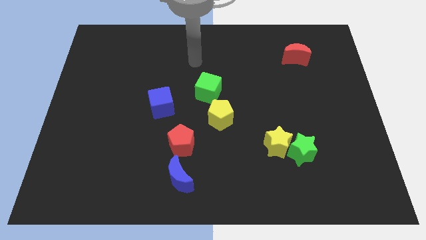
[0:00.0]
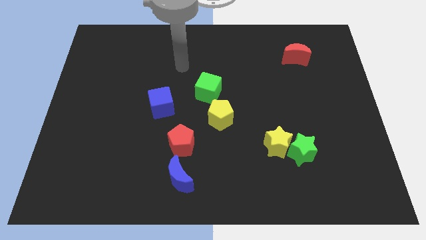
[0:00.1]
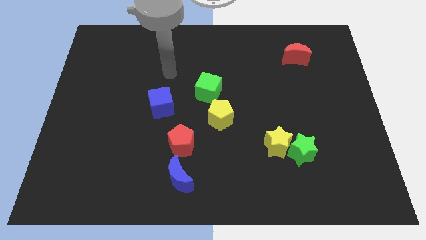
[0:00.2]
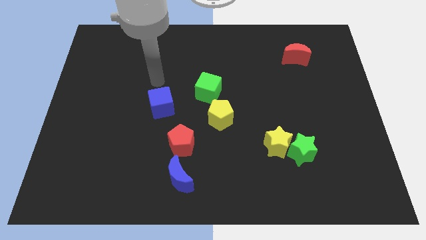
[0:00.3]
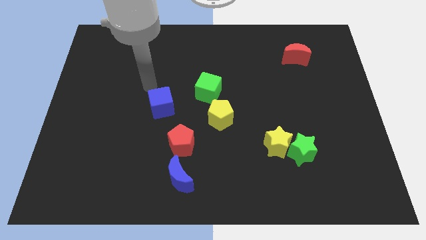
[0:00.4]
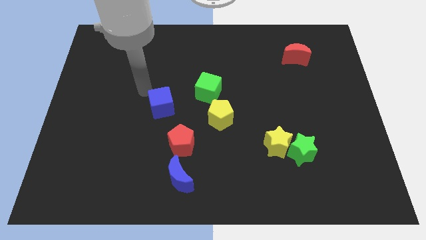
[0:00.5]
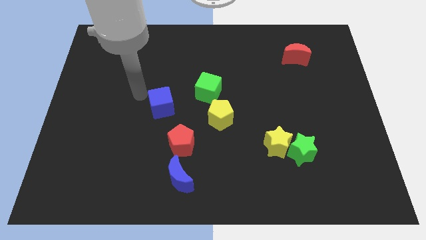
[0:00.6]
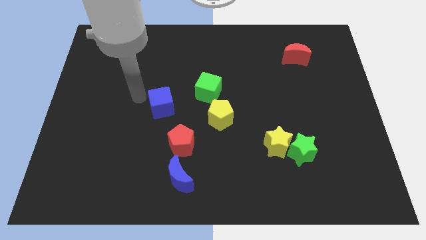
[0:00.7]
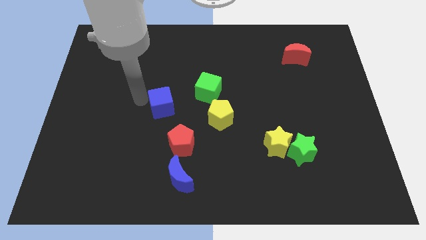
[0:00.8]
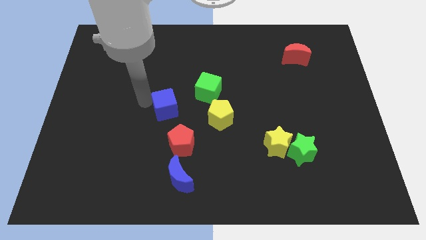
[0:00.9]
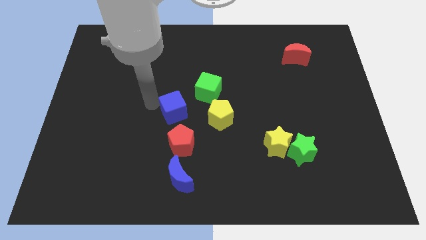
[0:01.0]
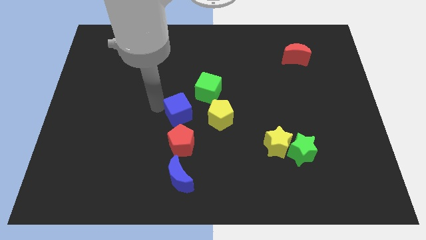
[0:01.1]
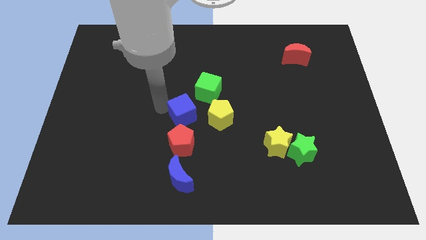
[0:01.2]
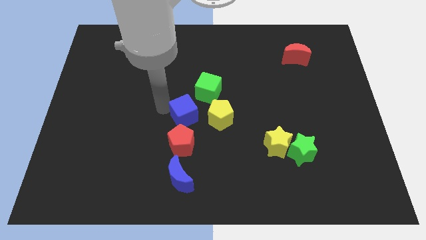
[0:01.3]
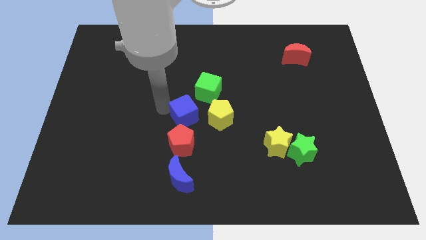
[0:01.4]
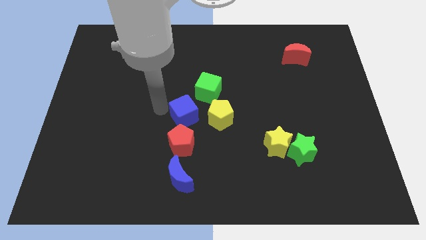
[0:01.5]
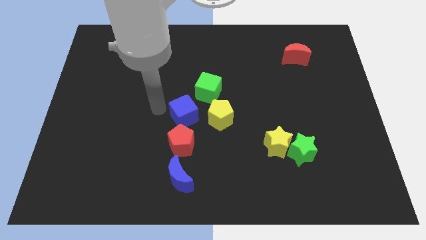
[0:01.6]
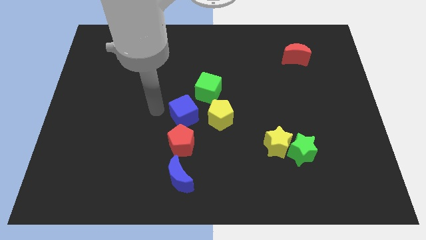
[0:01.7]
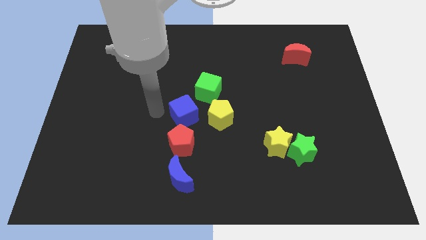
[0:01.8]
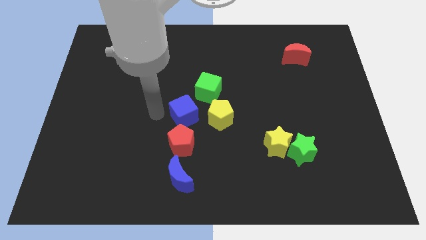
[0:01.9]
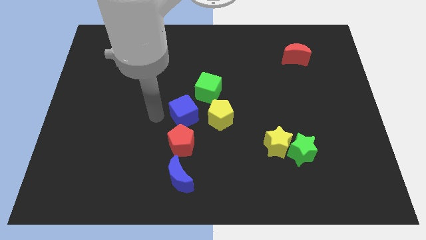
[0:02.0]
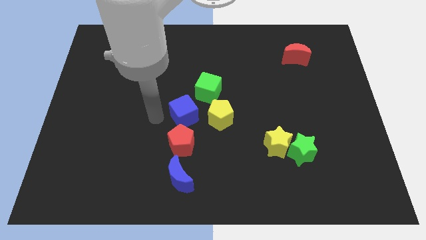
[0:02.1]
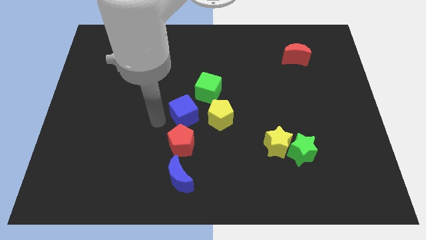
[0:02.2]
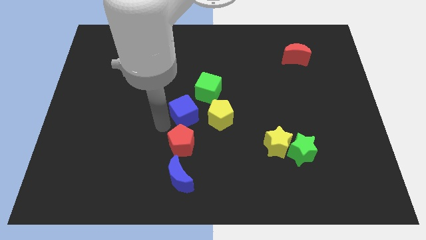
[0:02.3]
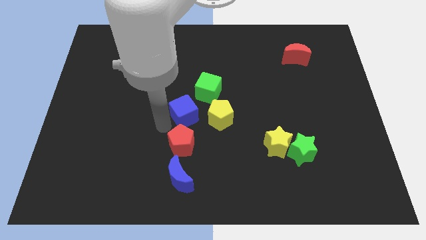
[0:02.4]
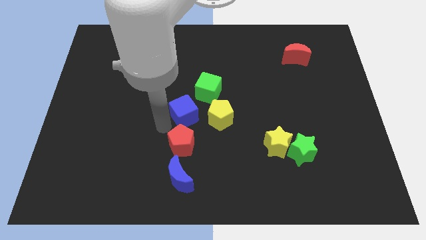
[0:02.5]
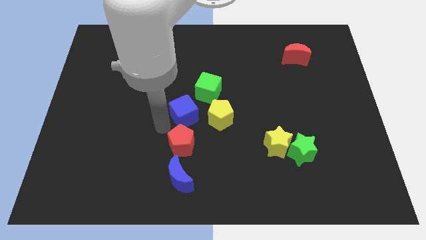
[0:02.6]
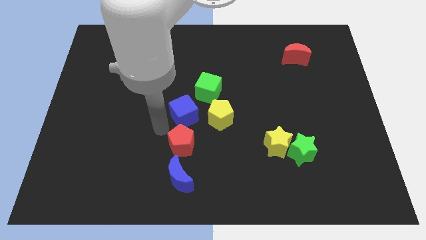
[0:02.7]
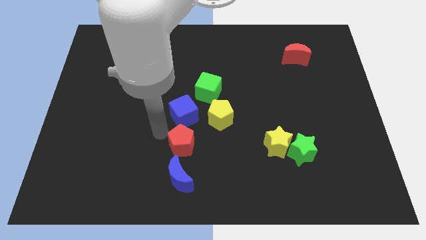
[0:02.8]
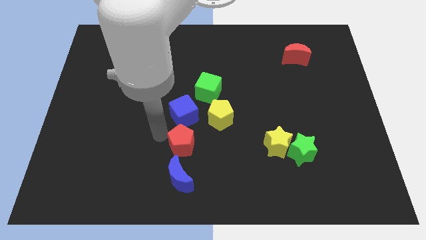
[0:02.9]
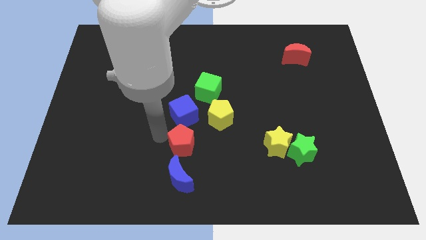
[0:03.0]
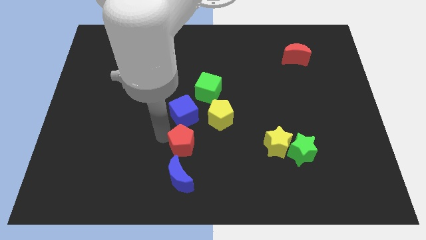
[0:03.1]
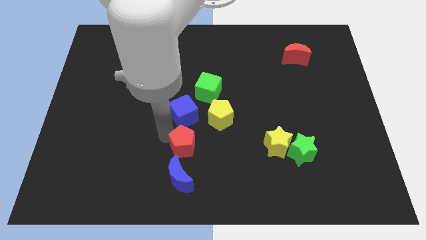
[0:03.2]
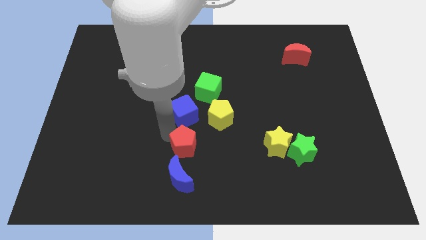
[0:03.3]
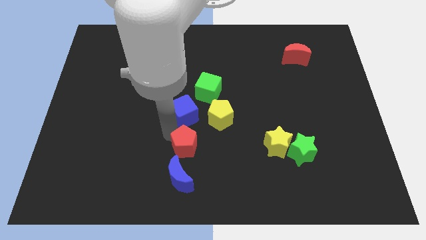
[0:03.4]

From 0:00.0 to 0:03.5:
push the blue cube vertically on top of the red pentagon

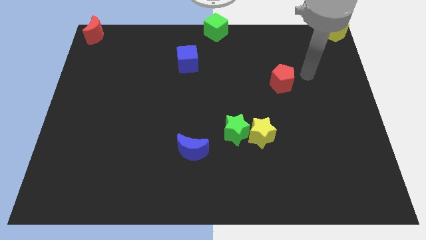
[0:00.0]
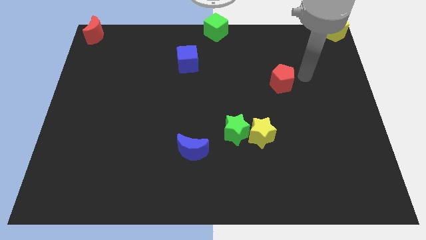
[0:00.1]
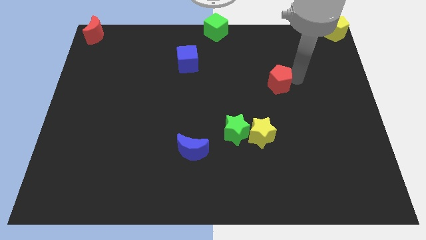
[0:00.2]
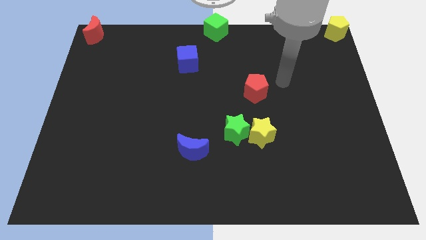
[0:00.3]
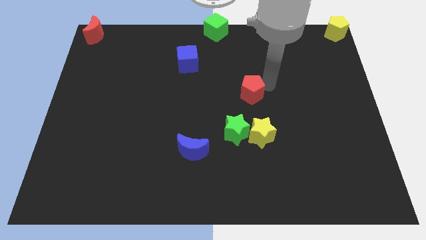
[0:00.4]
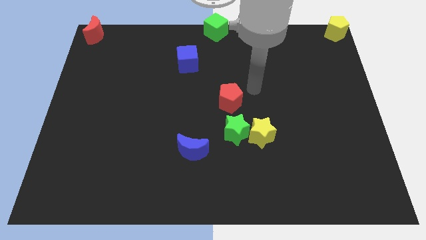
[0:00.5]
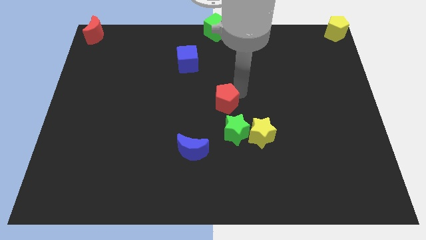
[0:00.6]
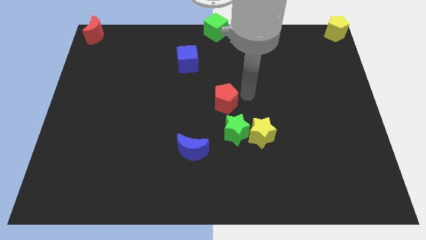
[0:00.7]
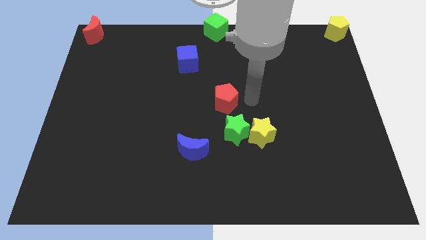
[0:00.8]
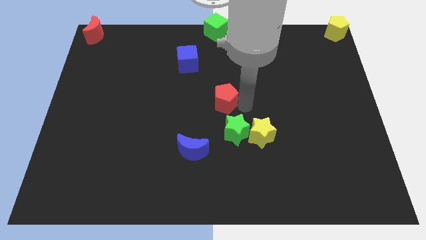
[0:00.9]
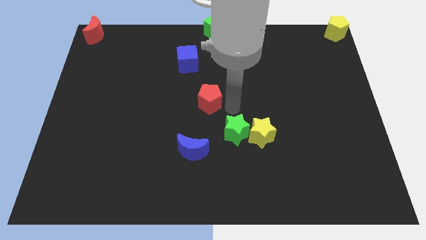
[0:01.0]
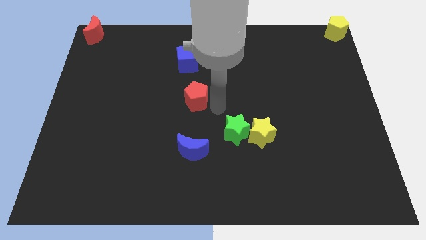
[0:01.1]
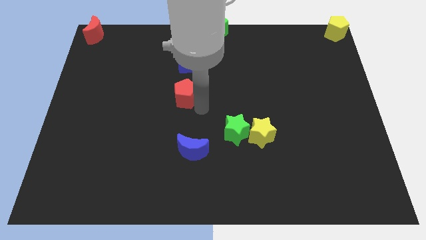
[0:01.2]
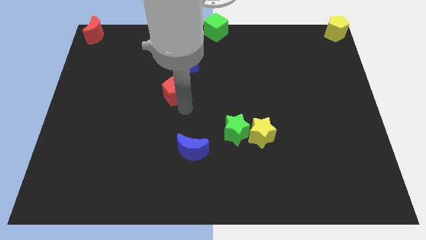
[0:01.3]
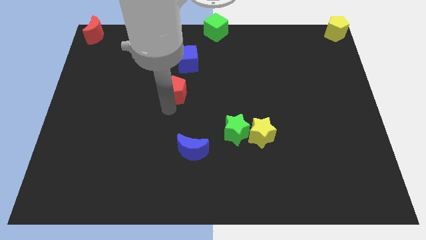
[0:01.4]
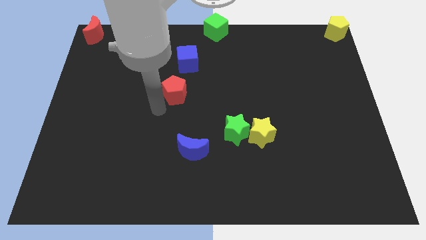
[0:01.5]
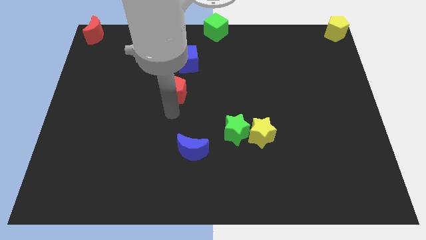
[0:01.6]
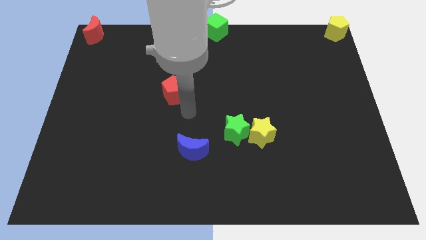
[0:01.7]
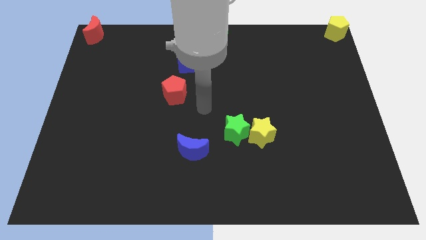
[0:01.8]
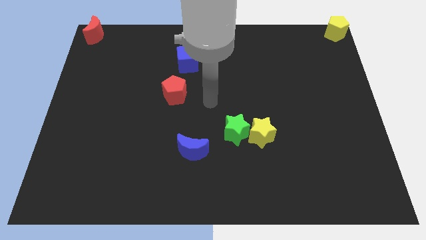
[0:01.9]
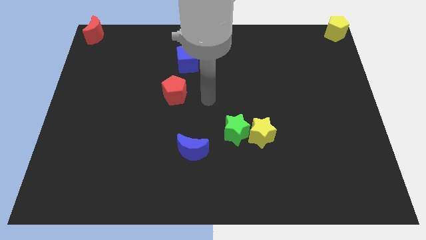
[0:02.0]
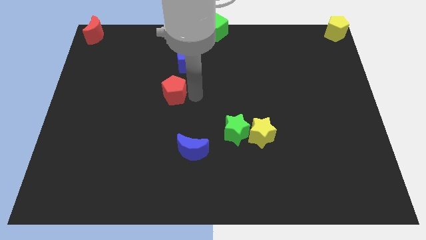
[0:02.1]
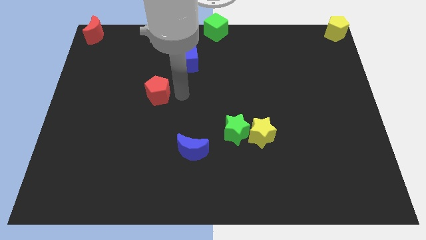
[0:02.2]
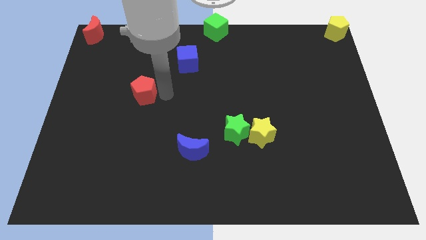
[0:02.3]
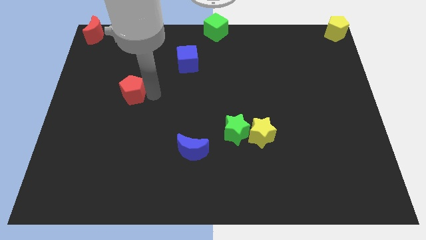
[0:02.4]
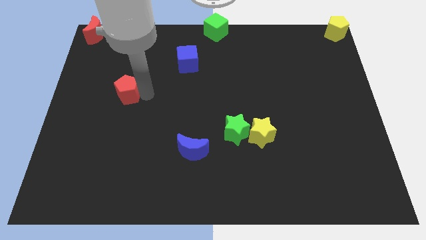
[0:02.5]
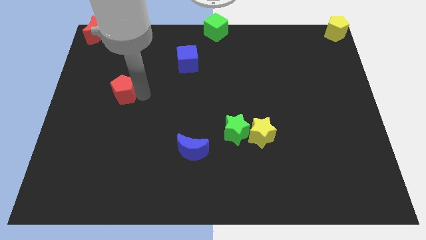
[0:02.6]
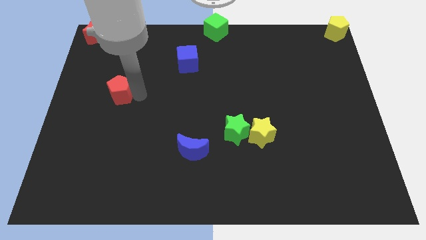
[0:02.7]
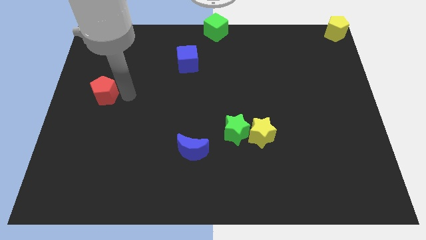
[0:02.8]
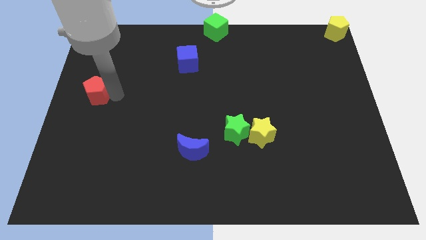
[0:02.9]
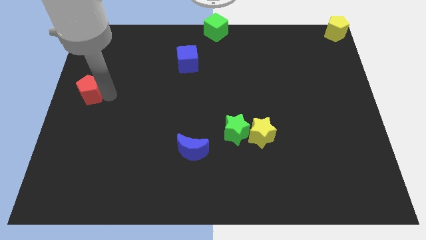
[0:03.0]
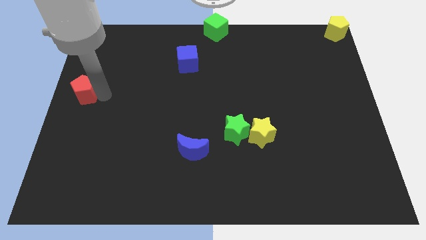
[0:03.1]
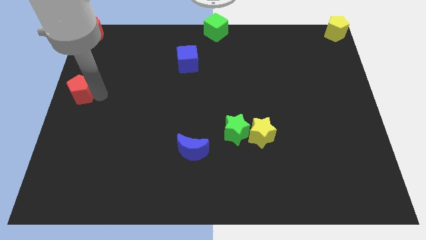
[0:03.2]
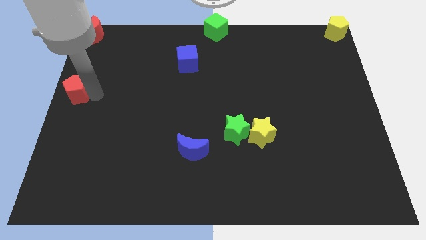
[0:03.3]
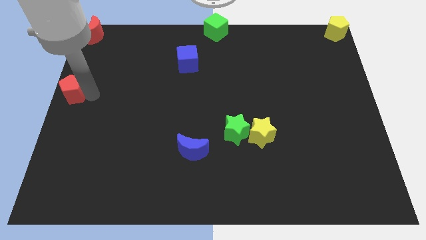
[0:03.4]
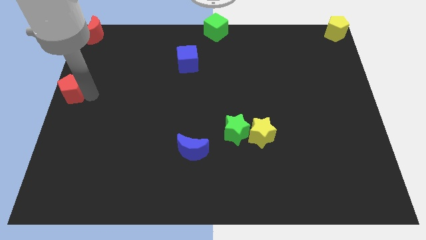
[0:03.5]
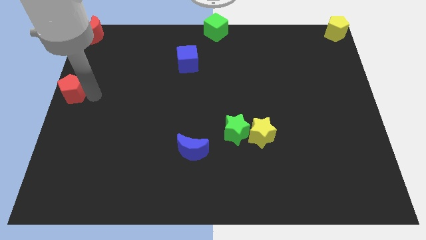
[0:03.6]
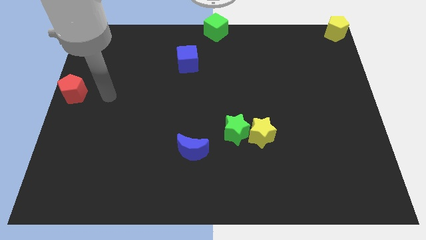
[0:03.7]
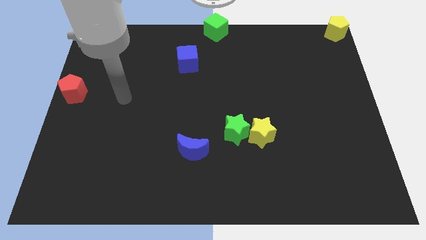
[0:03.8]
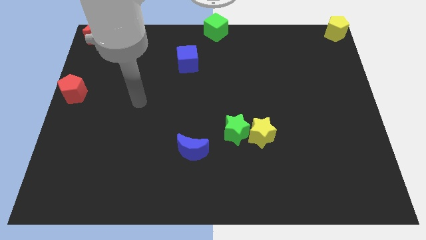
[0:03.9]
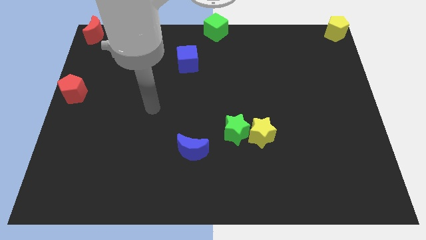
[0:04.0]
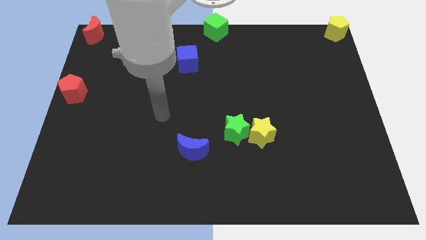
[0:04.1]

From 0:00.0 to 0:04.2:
push the red pentagon to the center left of the board

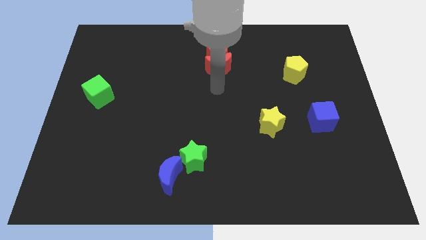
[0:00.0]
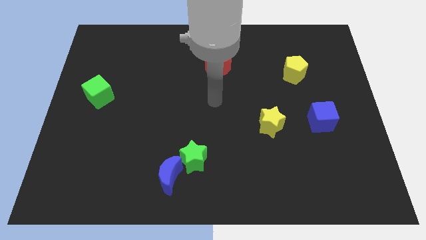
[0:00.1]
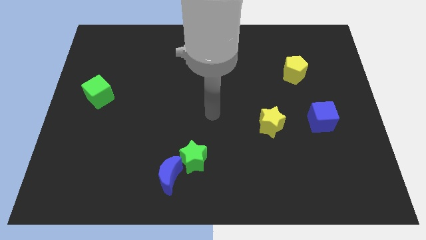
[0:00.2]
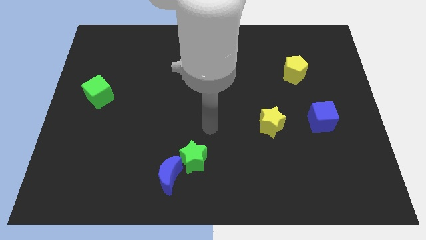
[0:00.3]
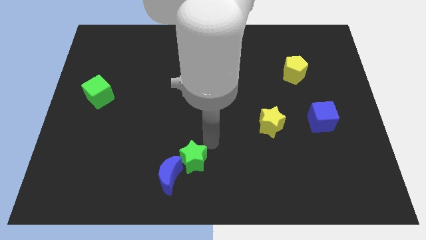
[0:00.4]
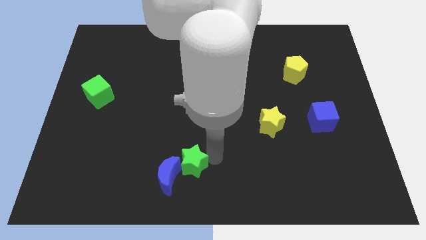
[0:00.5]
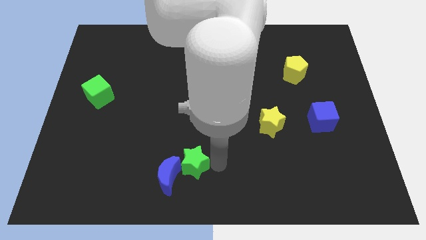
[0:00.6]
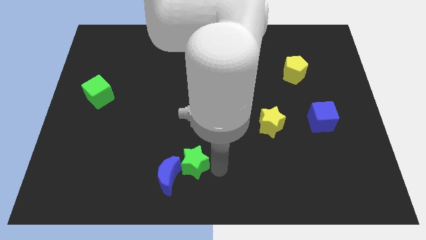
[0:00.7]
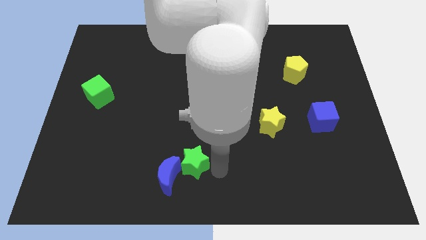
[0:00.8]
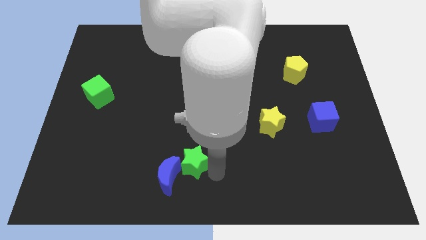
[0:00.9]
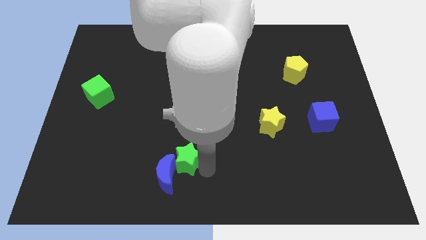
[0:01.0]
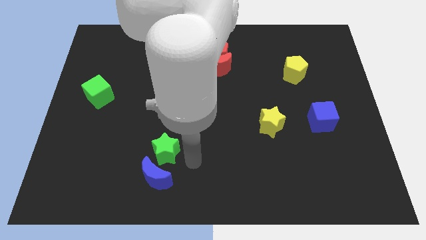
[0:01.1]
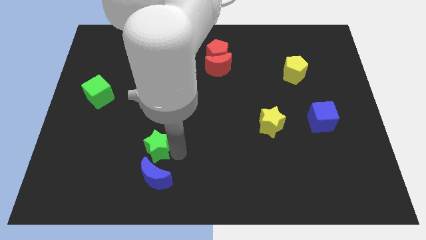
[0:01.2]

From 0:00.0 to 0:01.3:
move the green star to the top of the blue crescent
